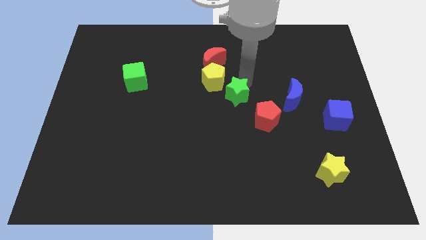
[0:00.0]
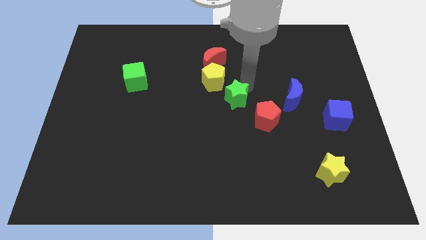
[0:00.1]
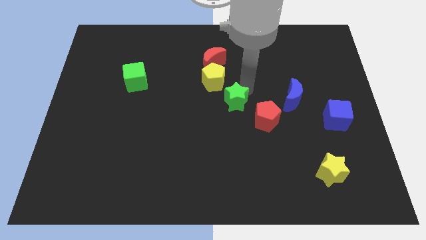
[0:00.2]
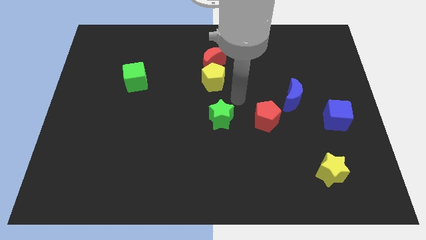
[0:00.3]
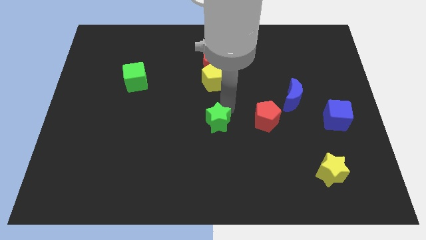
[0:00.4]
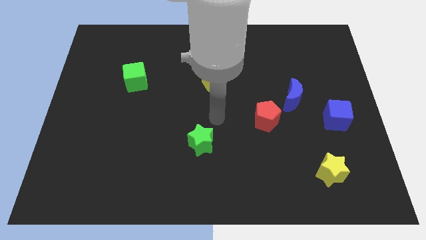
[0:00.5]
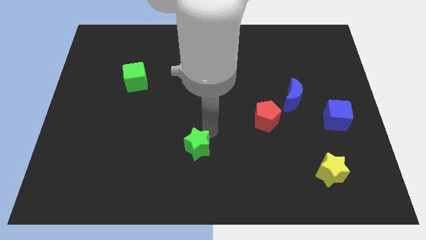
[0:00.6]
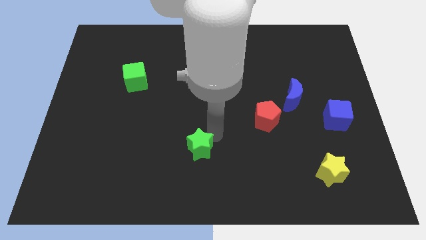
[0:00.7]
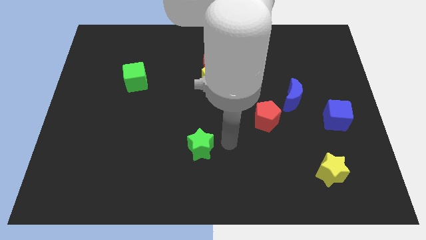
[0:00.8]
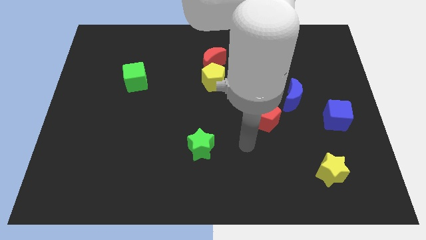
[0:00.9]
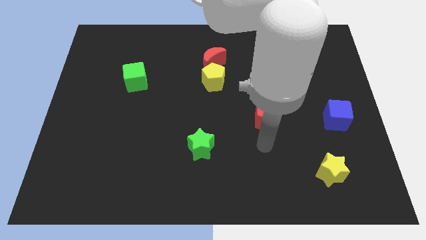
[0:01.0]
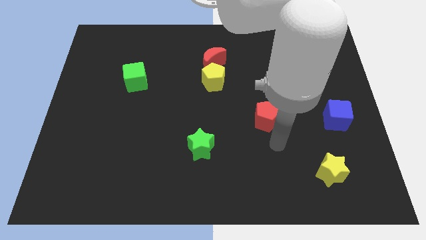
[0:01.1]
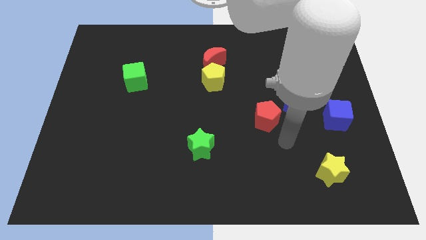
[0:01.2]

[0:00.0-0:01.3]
push the green star diagonally bottom left to the red pentagon

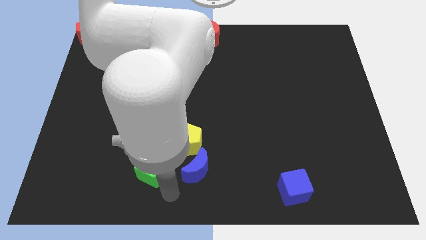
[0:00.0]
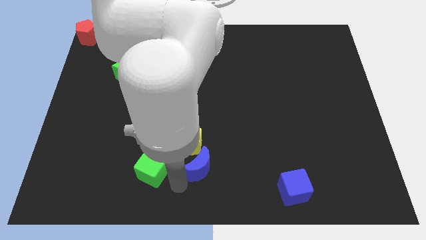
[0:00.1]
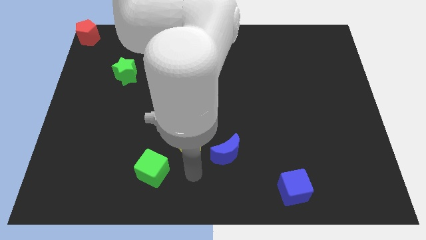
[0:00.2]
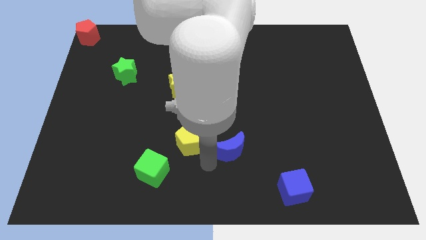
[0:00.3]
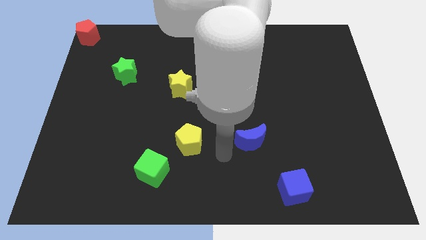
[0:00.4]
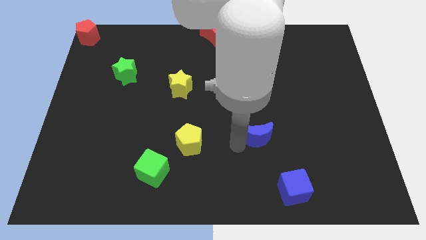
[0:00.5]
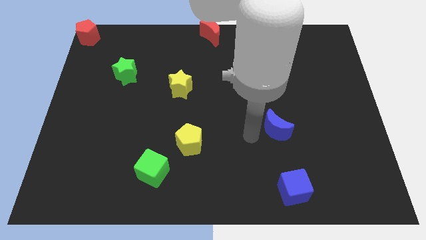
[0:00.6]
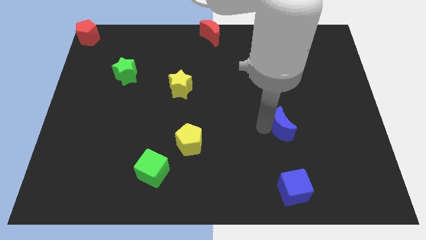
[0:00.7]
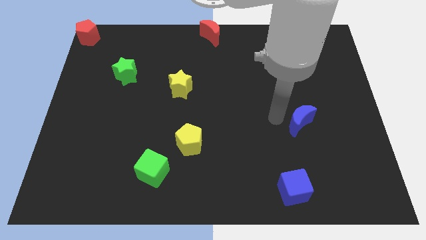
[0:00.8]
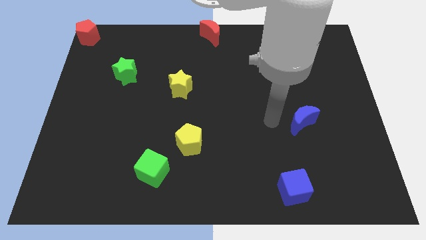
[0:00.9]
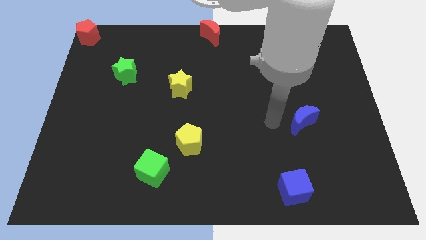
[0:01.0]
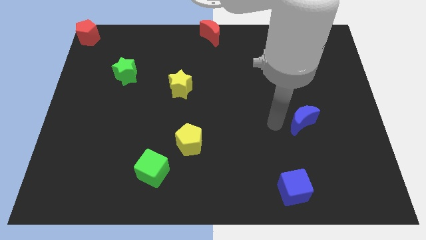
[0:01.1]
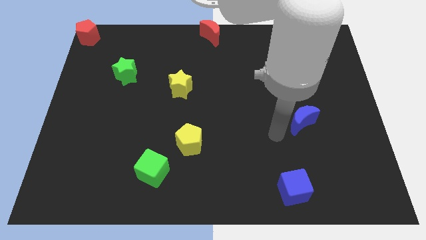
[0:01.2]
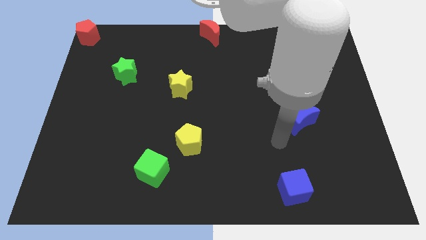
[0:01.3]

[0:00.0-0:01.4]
push the blue crescent diagonally on the top right side of the blue cube

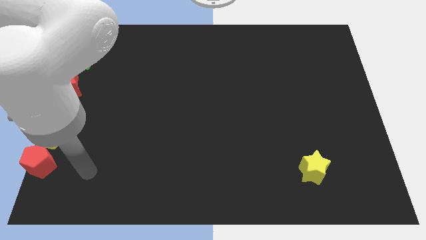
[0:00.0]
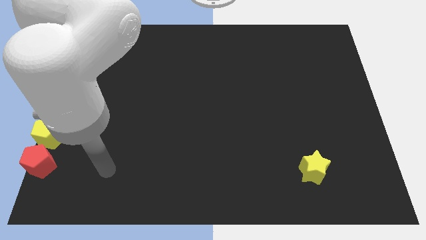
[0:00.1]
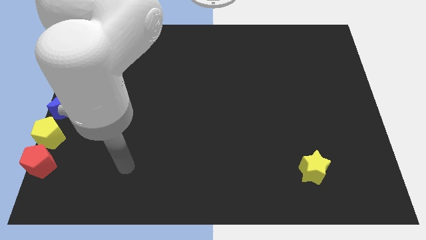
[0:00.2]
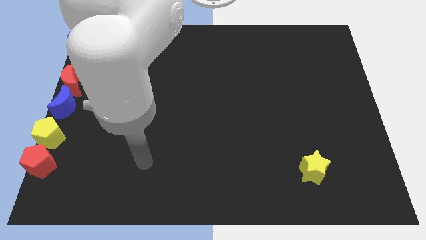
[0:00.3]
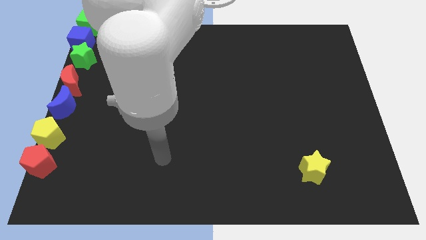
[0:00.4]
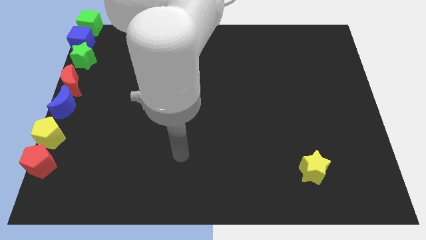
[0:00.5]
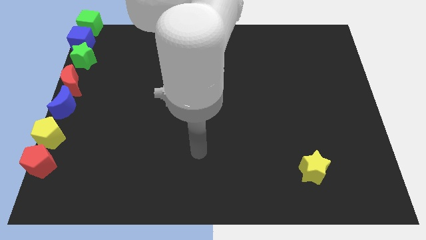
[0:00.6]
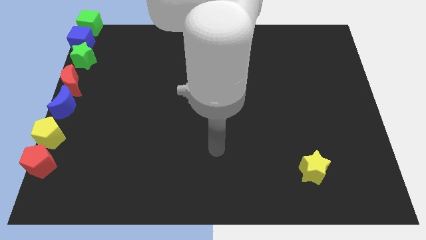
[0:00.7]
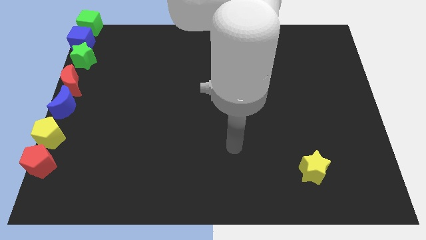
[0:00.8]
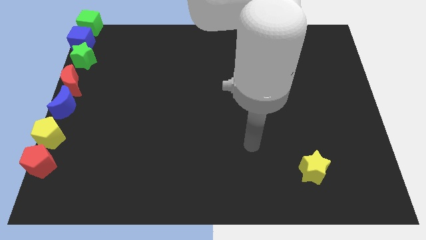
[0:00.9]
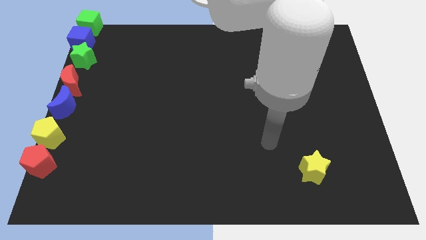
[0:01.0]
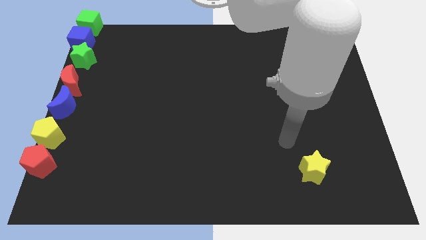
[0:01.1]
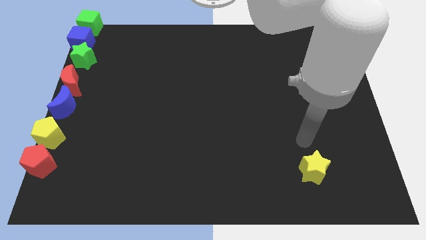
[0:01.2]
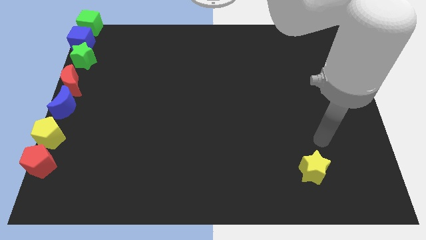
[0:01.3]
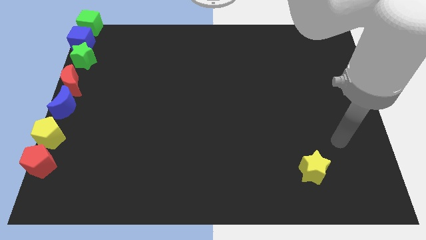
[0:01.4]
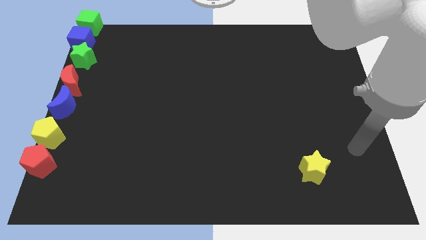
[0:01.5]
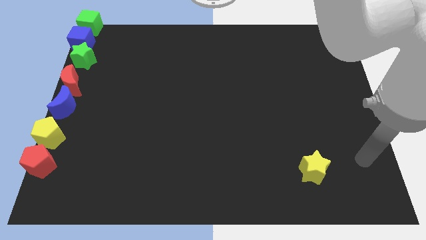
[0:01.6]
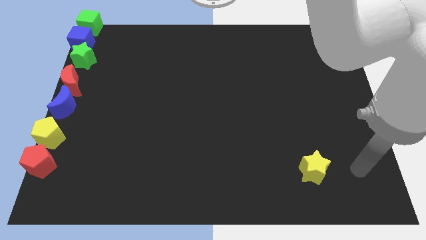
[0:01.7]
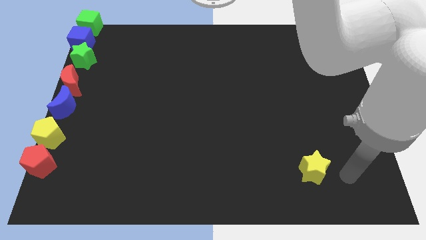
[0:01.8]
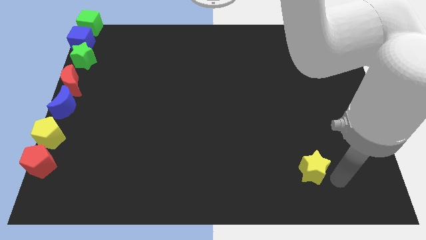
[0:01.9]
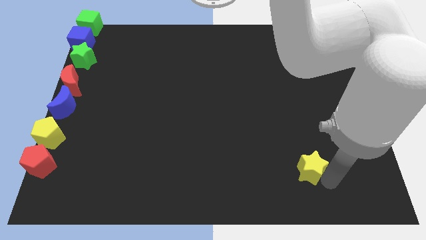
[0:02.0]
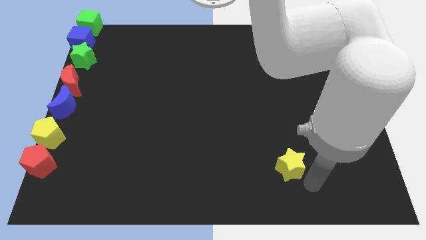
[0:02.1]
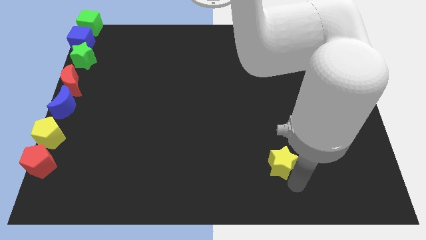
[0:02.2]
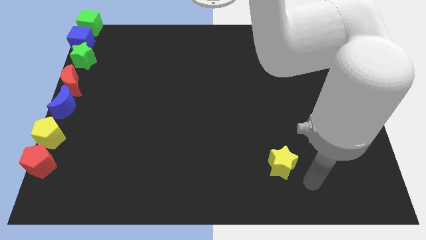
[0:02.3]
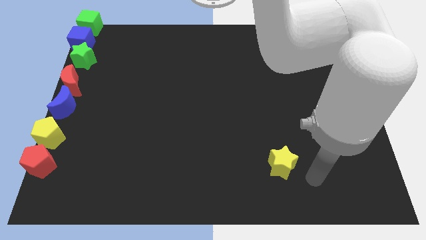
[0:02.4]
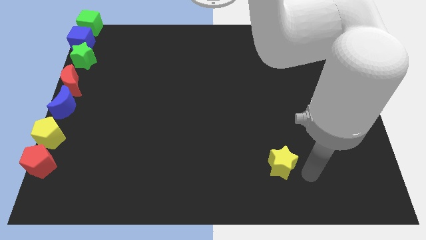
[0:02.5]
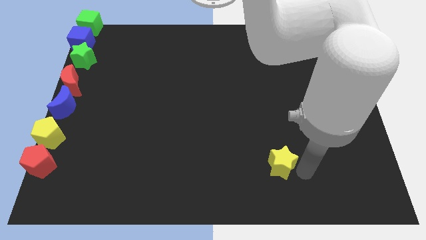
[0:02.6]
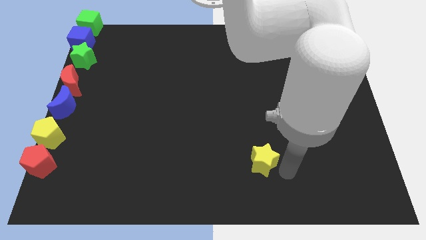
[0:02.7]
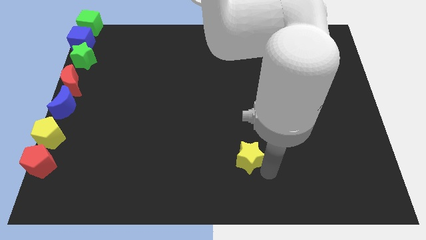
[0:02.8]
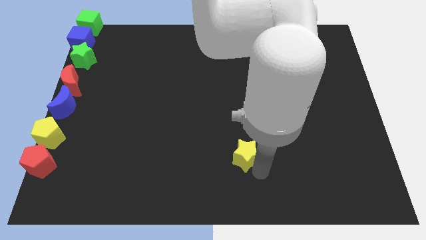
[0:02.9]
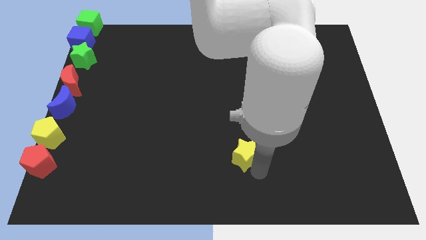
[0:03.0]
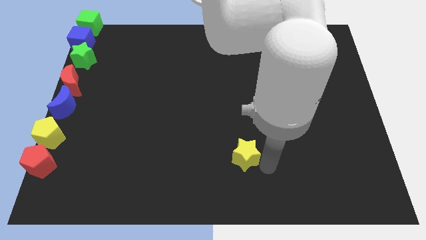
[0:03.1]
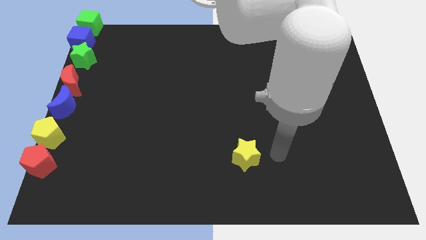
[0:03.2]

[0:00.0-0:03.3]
push the yellow star slightly to the left

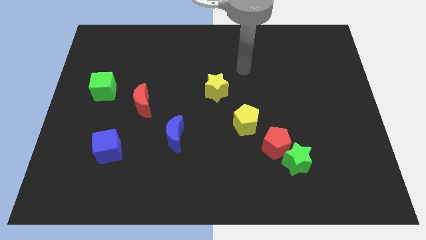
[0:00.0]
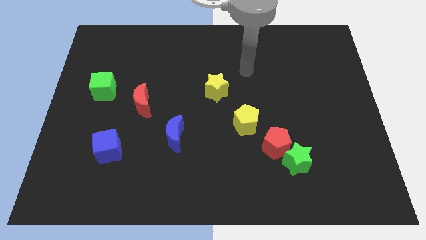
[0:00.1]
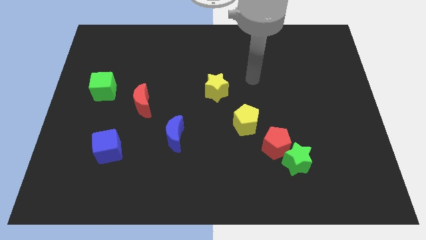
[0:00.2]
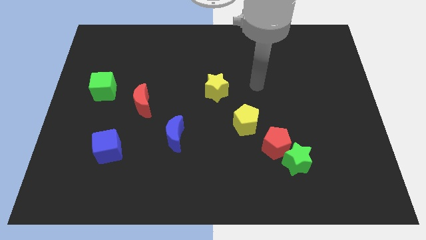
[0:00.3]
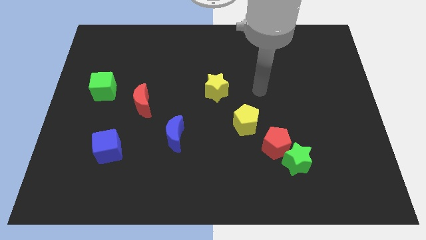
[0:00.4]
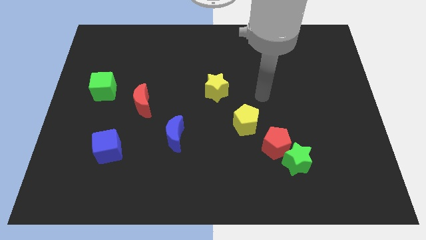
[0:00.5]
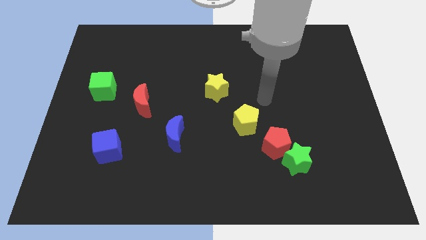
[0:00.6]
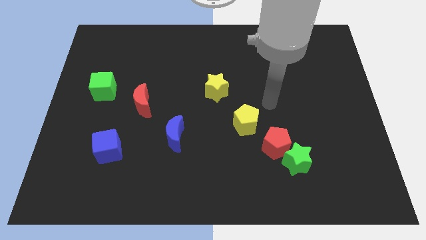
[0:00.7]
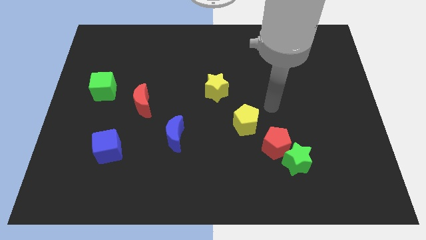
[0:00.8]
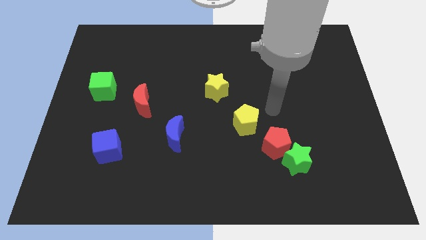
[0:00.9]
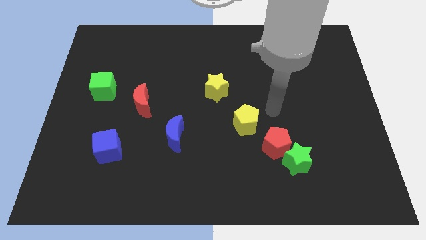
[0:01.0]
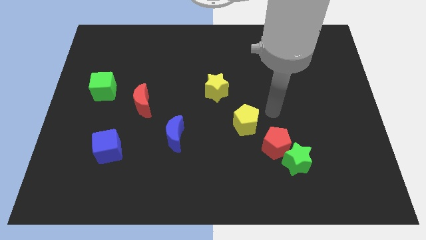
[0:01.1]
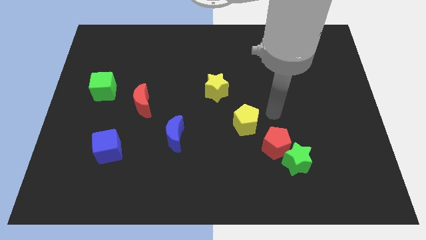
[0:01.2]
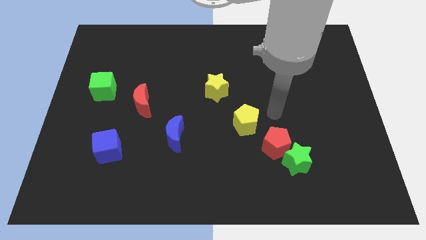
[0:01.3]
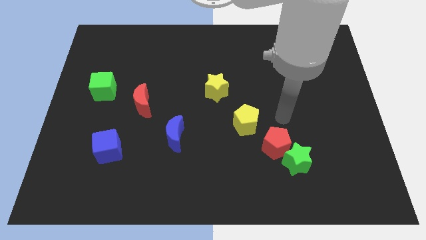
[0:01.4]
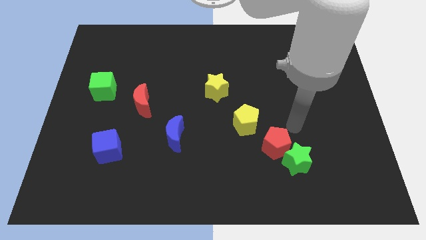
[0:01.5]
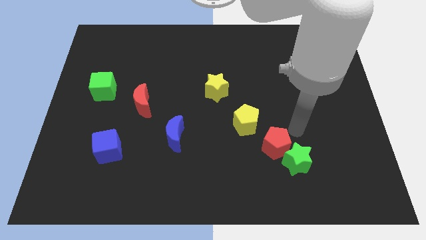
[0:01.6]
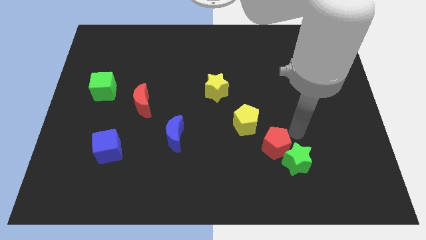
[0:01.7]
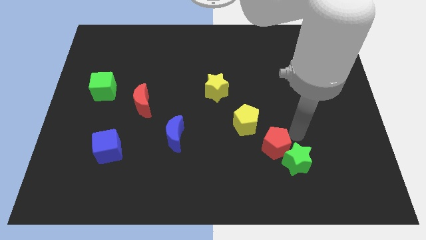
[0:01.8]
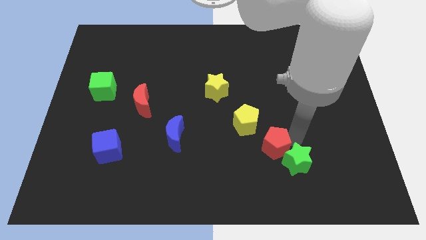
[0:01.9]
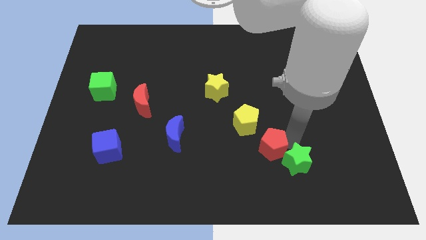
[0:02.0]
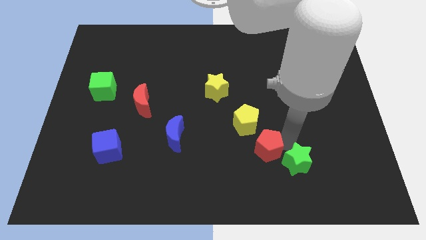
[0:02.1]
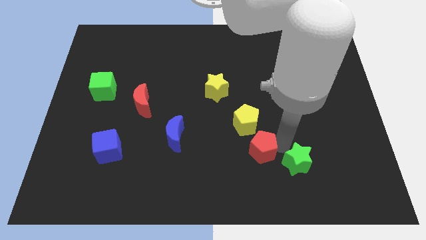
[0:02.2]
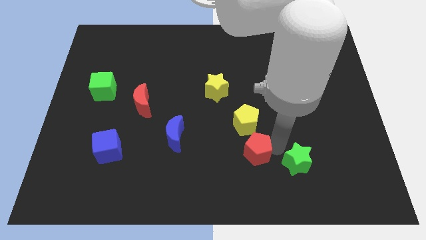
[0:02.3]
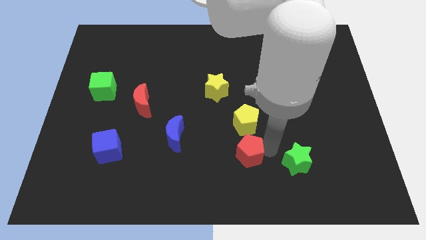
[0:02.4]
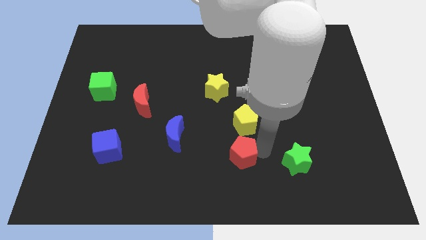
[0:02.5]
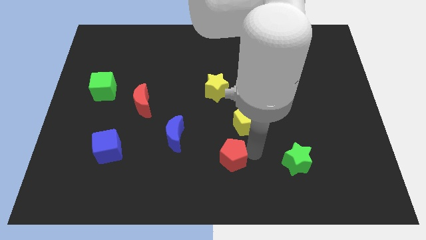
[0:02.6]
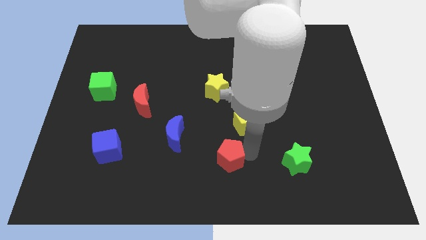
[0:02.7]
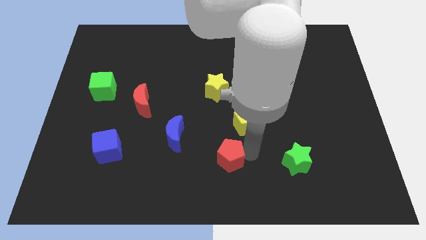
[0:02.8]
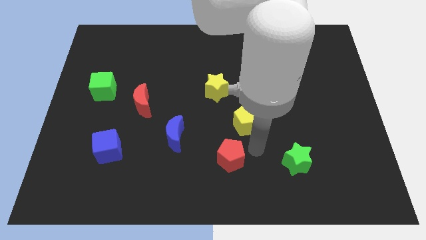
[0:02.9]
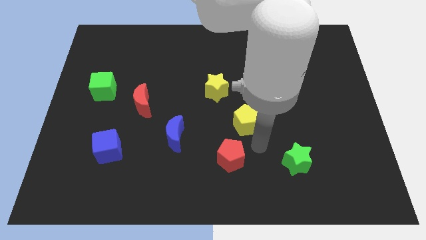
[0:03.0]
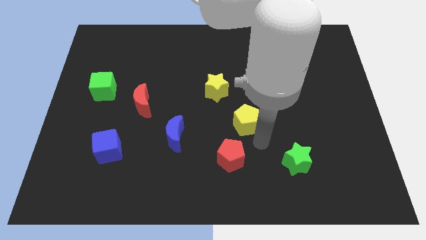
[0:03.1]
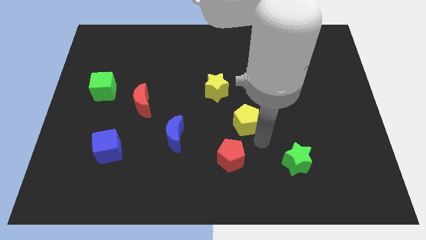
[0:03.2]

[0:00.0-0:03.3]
push the red pentagon left to the green star
